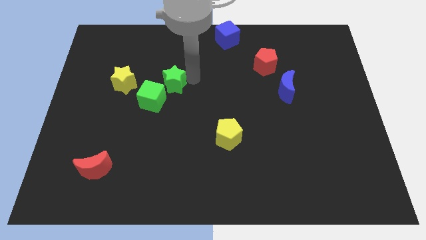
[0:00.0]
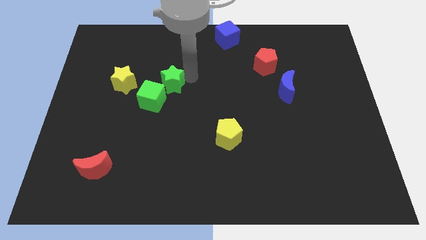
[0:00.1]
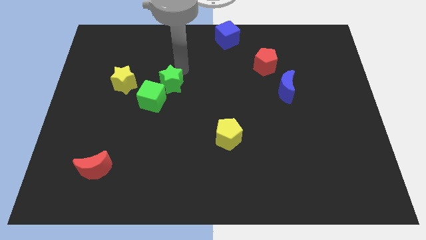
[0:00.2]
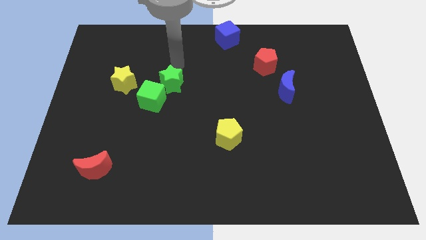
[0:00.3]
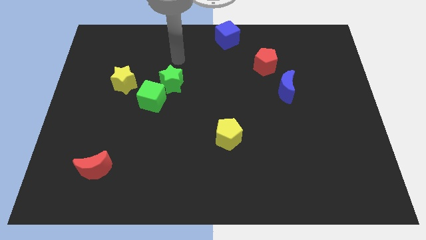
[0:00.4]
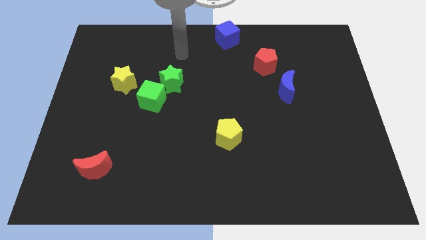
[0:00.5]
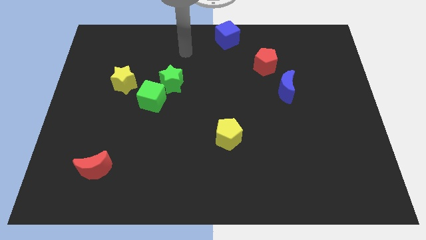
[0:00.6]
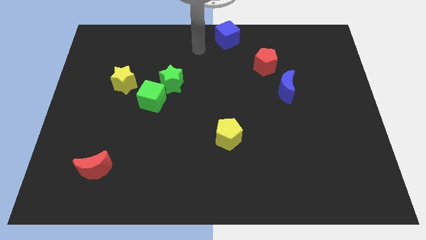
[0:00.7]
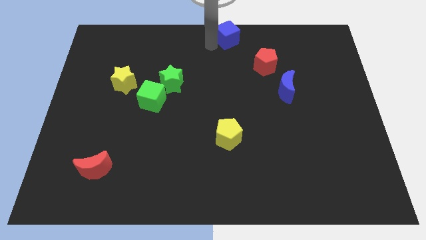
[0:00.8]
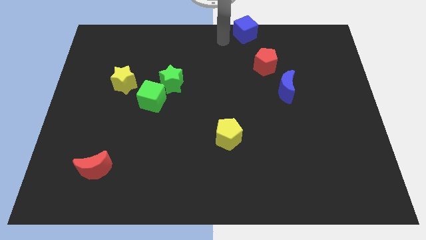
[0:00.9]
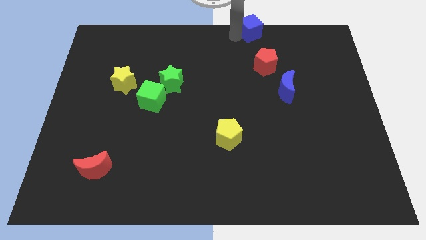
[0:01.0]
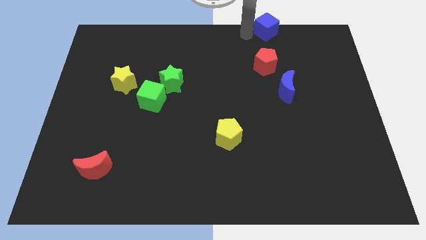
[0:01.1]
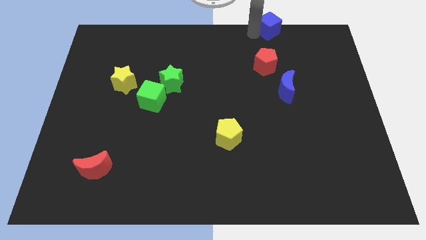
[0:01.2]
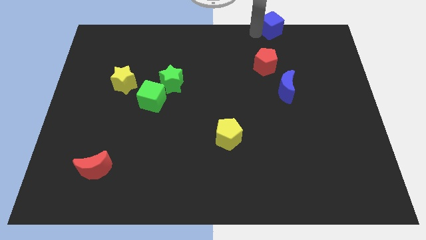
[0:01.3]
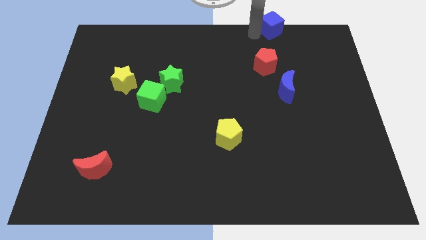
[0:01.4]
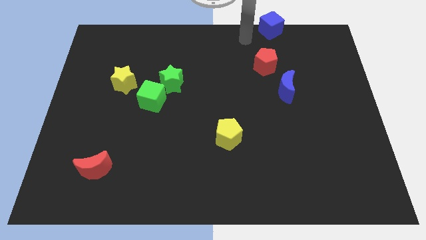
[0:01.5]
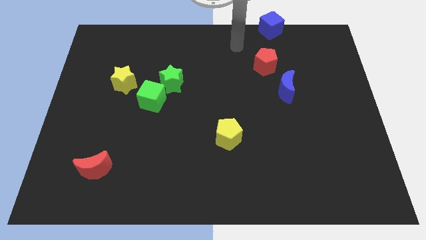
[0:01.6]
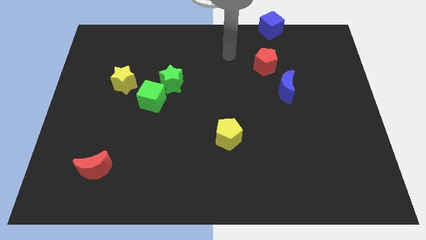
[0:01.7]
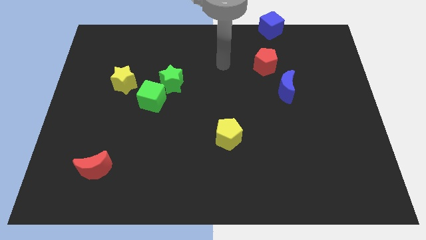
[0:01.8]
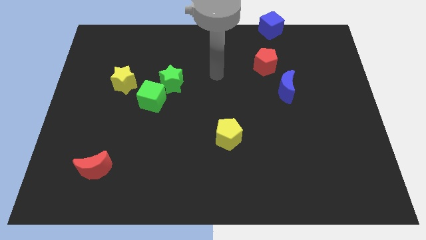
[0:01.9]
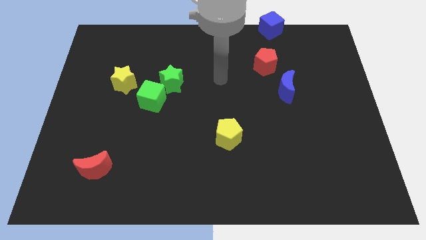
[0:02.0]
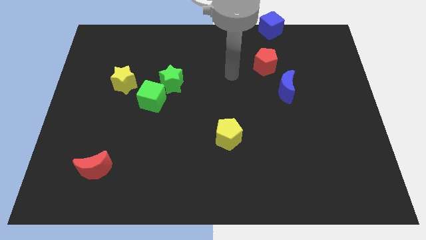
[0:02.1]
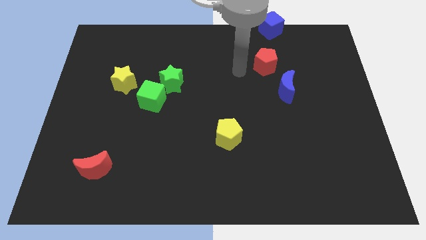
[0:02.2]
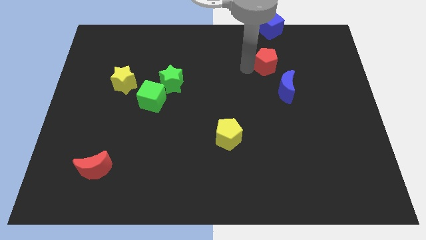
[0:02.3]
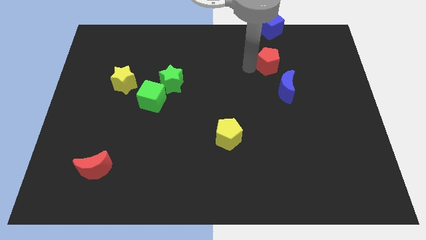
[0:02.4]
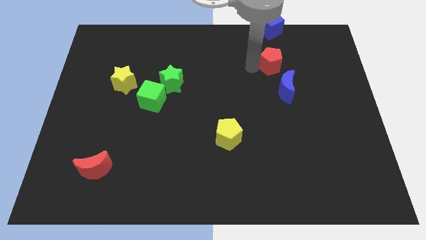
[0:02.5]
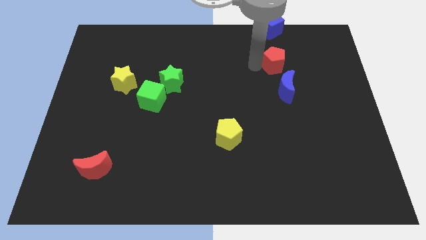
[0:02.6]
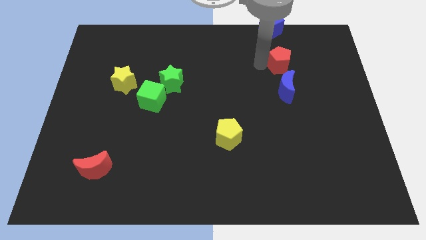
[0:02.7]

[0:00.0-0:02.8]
place blue cube and red pentagon in a vertical line

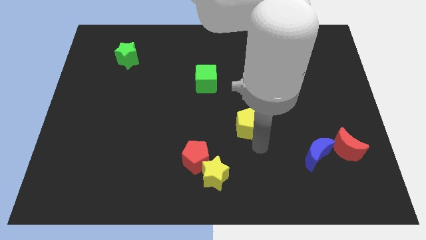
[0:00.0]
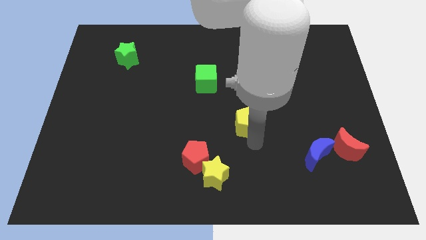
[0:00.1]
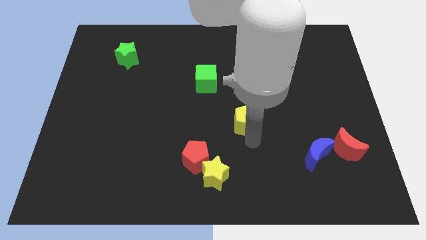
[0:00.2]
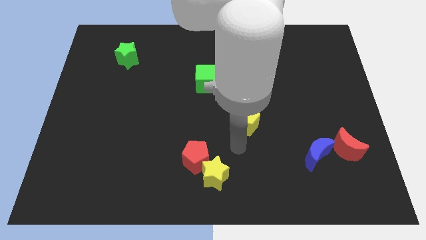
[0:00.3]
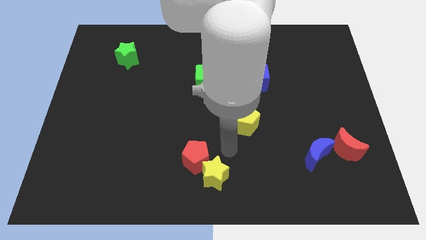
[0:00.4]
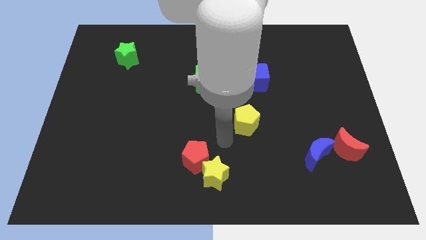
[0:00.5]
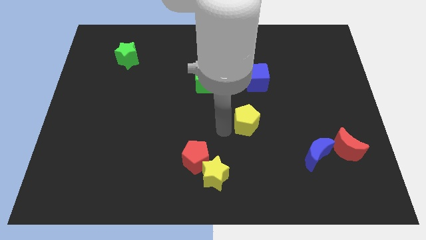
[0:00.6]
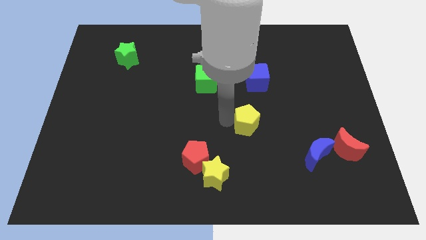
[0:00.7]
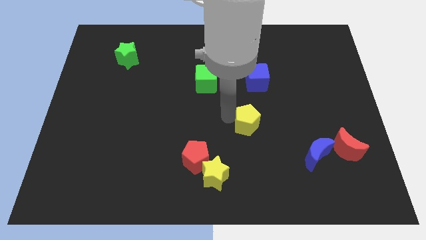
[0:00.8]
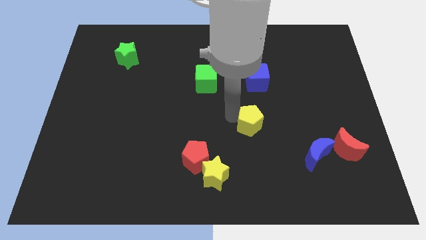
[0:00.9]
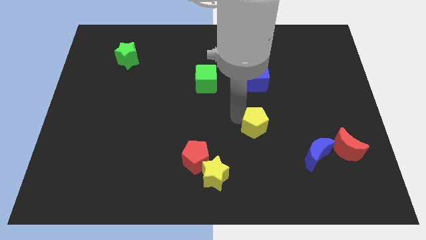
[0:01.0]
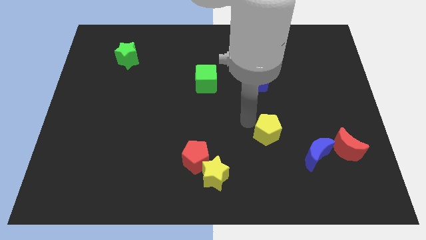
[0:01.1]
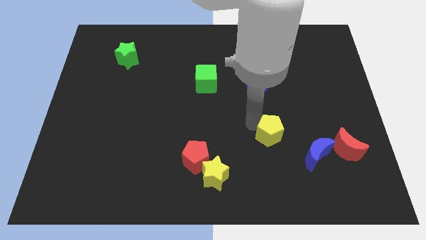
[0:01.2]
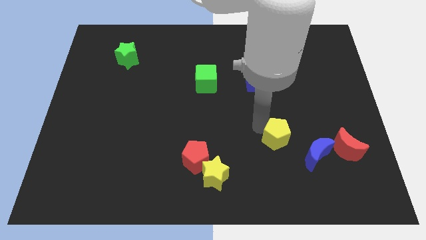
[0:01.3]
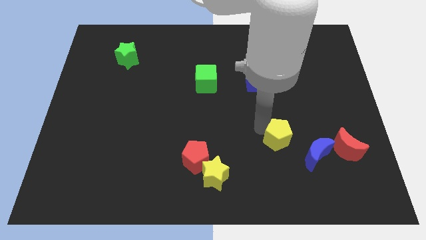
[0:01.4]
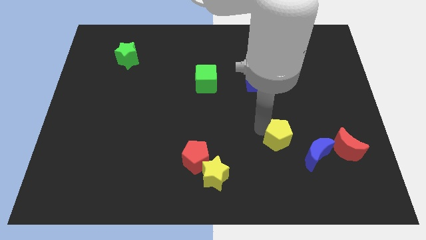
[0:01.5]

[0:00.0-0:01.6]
move the yellow pentagon towards the blue moon

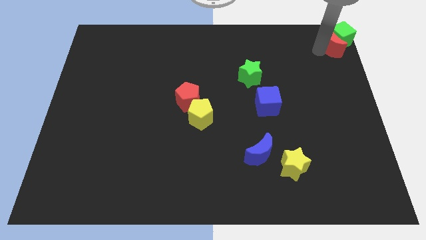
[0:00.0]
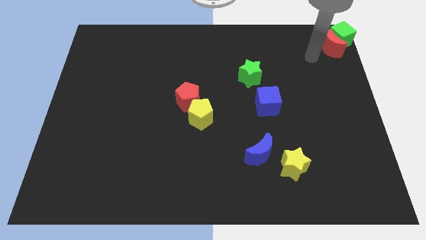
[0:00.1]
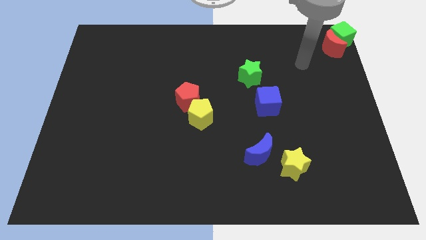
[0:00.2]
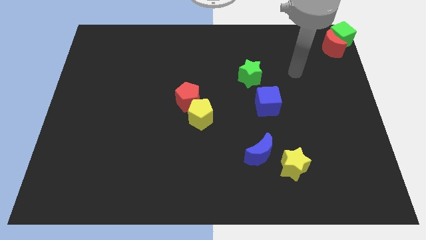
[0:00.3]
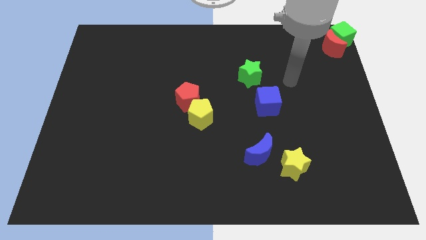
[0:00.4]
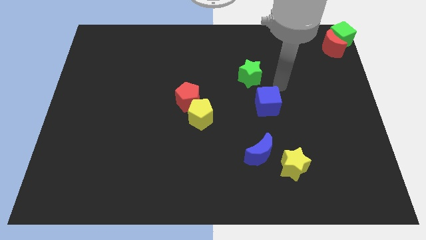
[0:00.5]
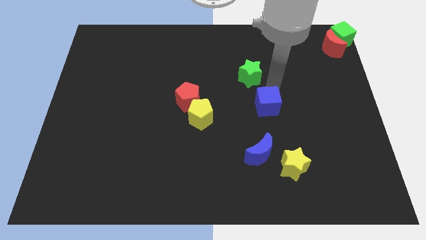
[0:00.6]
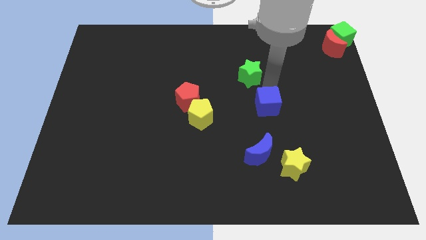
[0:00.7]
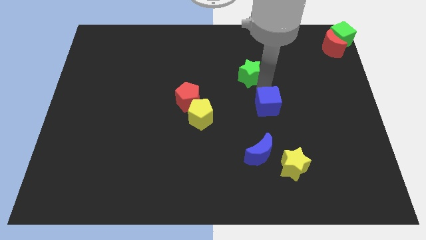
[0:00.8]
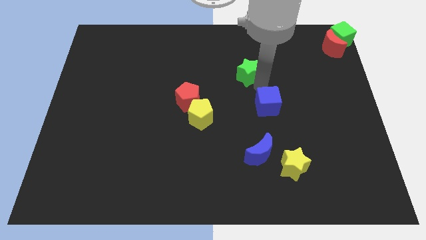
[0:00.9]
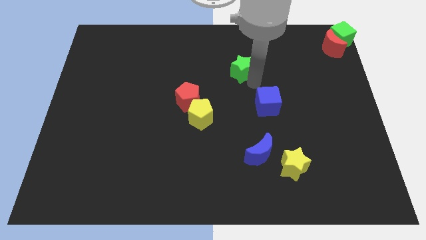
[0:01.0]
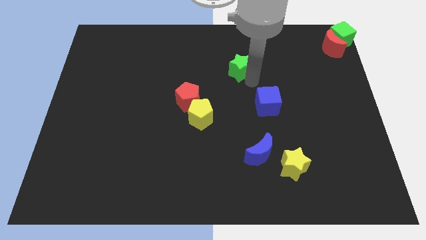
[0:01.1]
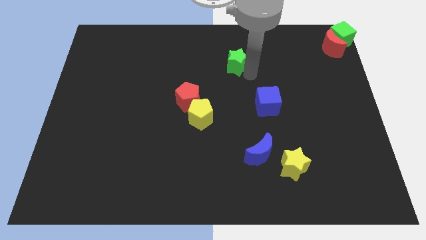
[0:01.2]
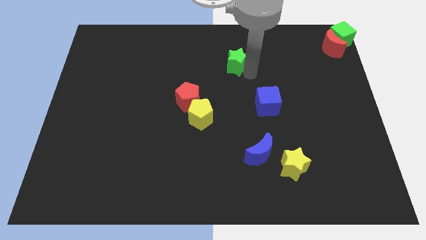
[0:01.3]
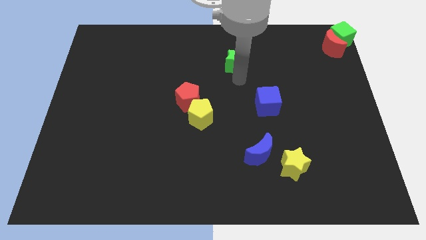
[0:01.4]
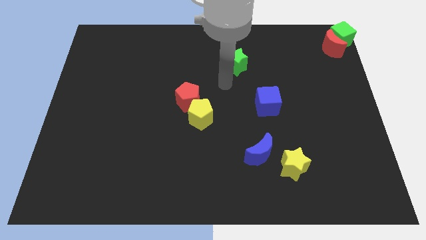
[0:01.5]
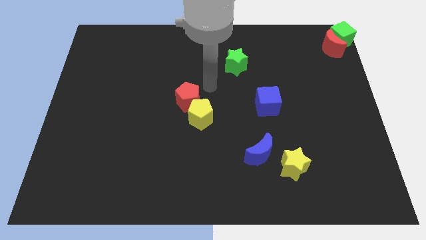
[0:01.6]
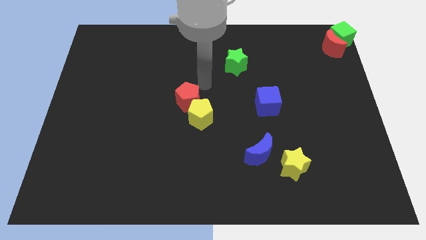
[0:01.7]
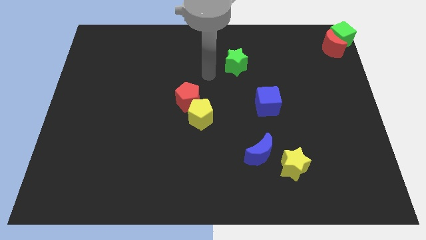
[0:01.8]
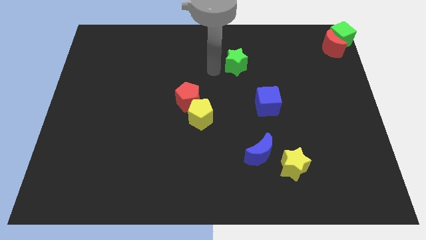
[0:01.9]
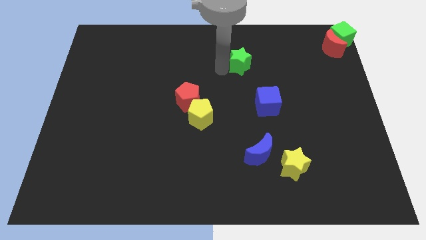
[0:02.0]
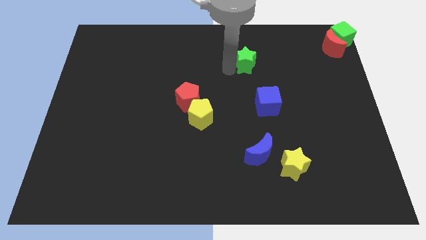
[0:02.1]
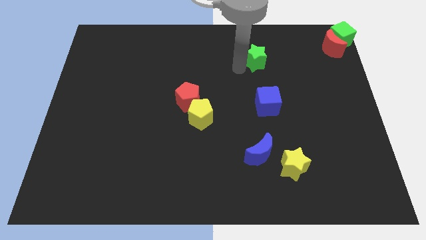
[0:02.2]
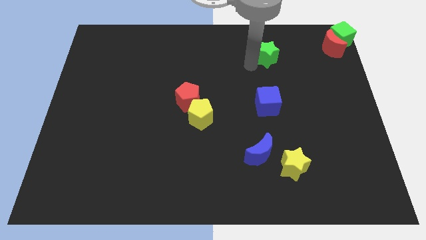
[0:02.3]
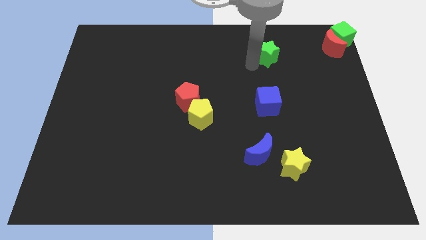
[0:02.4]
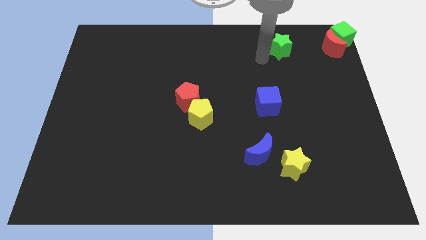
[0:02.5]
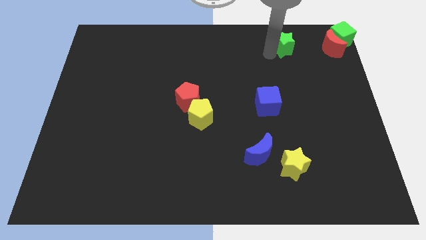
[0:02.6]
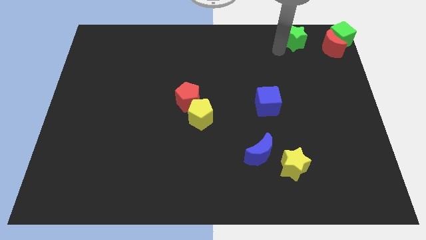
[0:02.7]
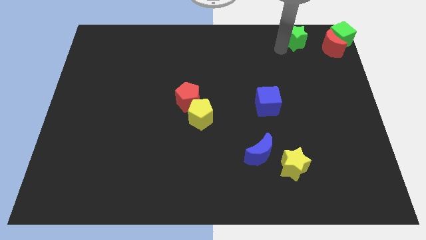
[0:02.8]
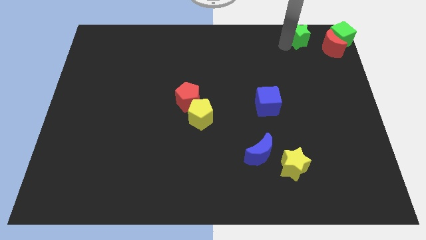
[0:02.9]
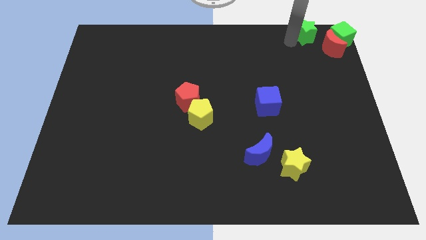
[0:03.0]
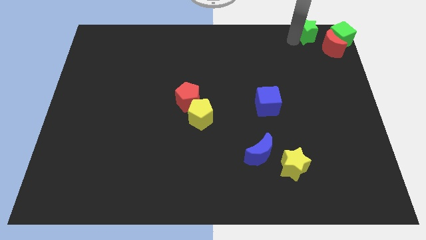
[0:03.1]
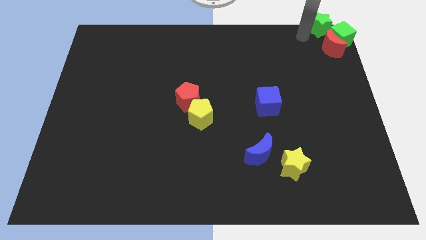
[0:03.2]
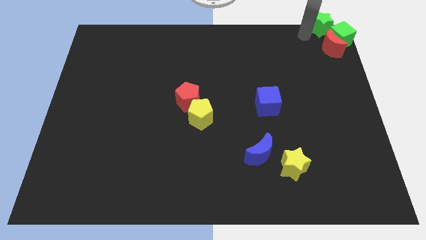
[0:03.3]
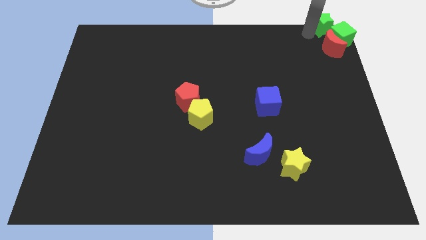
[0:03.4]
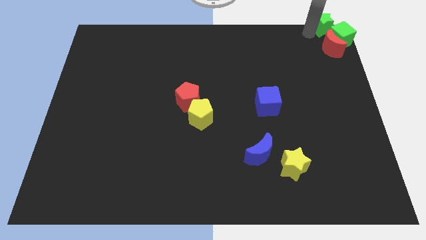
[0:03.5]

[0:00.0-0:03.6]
move the green star to the top side of the group of blocks

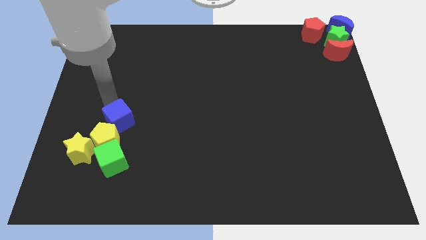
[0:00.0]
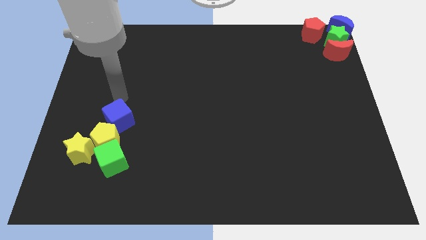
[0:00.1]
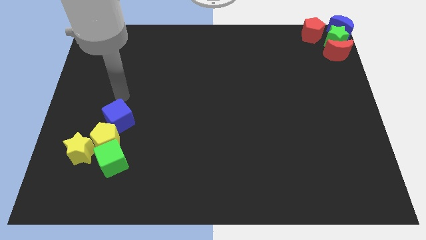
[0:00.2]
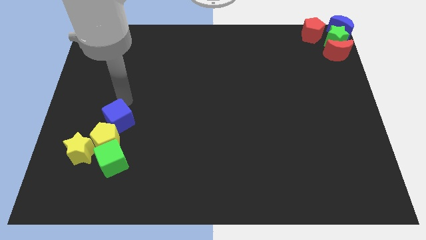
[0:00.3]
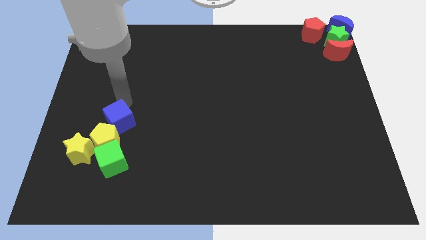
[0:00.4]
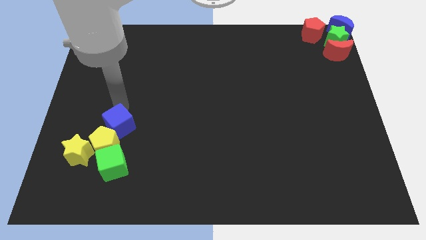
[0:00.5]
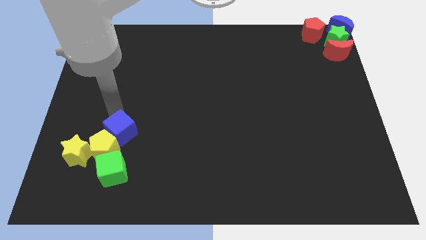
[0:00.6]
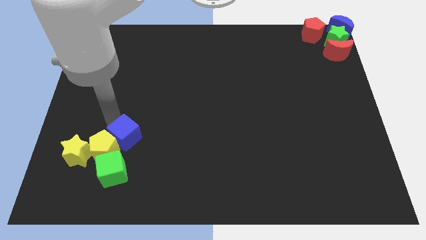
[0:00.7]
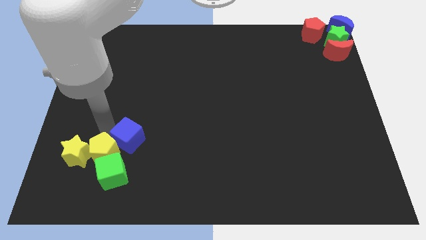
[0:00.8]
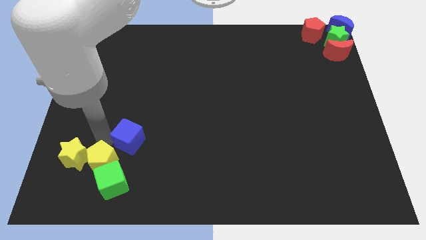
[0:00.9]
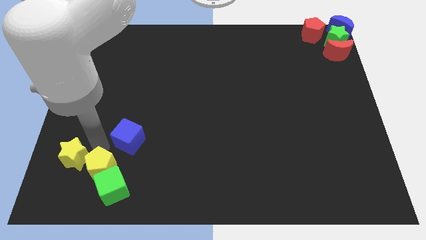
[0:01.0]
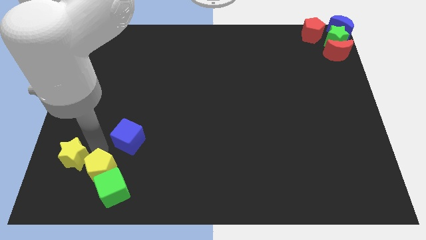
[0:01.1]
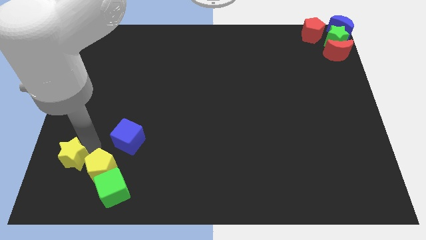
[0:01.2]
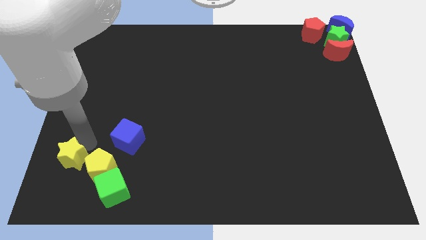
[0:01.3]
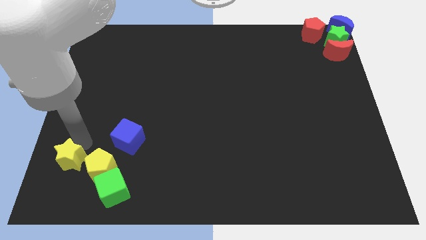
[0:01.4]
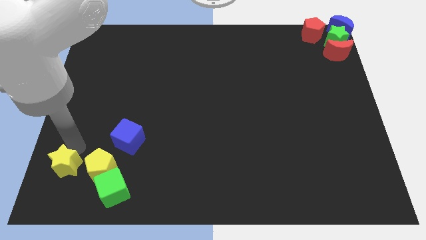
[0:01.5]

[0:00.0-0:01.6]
separate group of blocks from the blue cube
